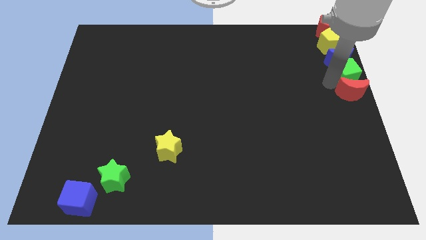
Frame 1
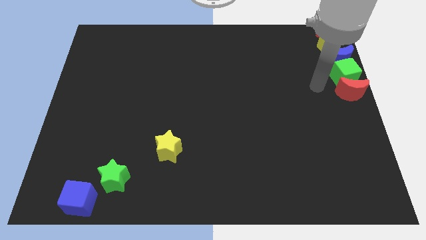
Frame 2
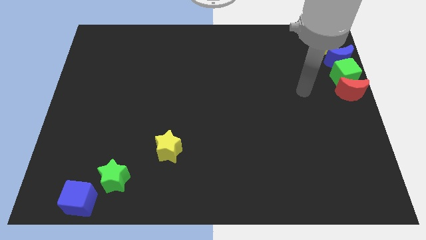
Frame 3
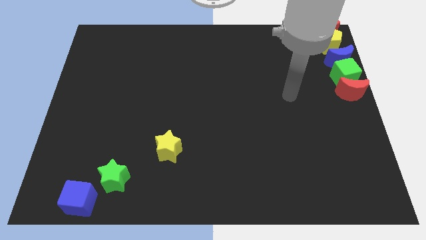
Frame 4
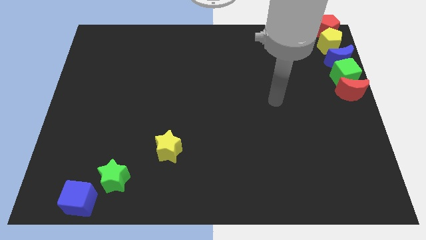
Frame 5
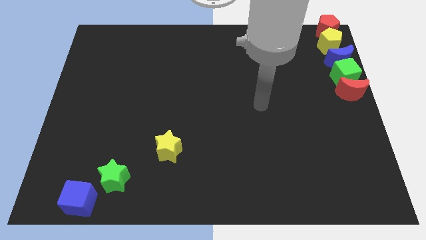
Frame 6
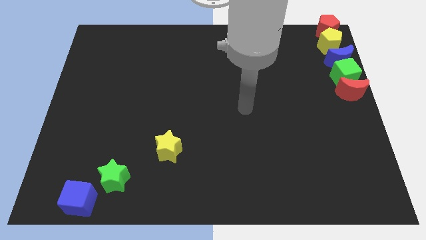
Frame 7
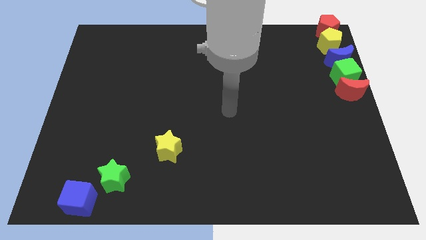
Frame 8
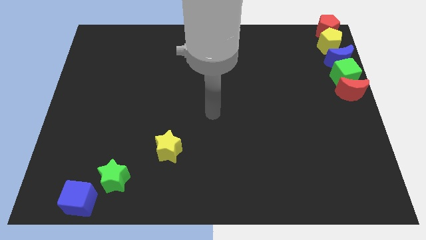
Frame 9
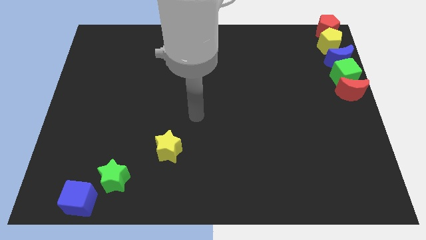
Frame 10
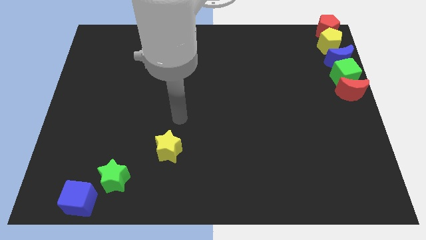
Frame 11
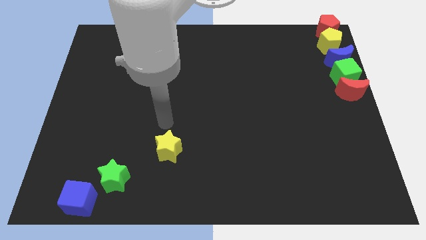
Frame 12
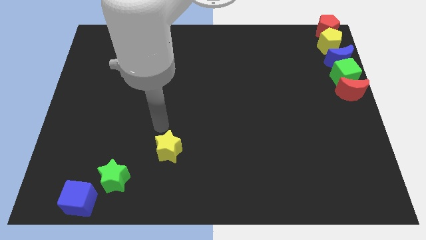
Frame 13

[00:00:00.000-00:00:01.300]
point your arm at the top of yellow star

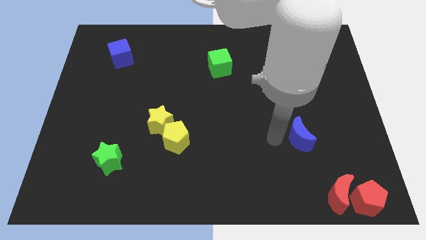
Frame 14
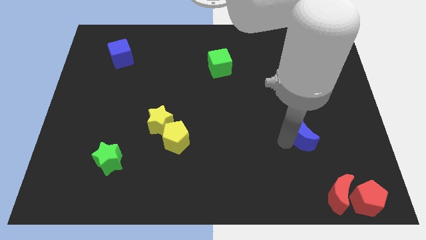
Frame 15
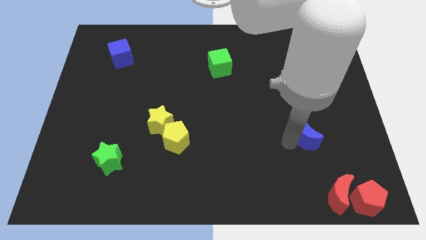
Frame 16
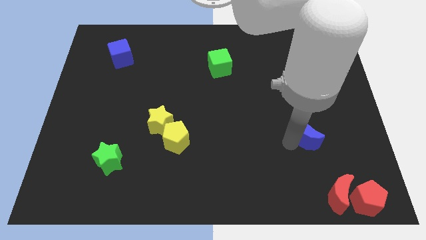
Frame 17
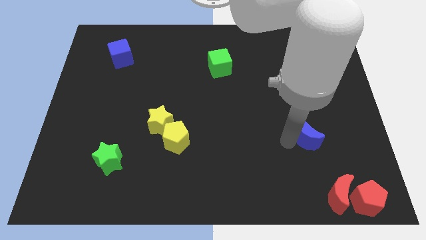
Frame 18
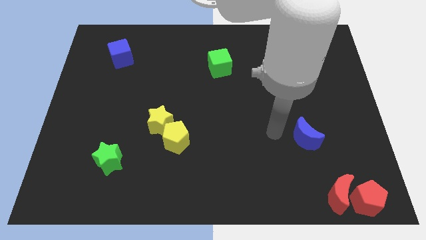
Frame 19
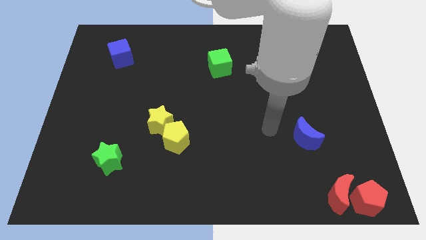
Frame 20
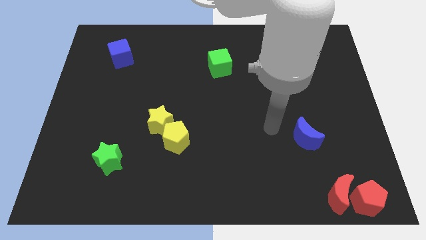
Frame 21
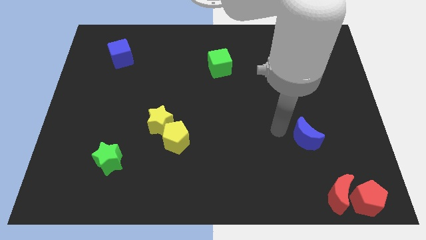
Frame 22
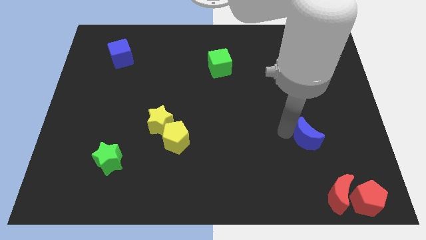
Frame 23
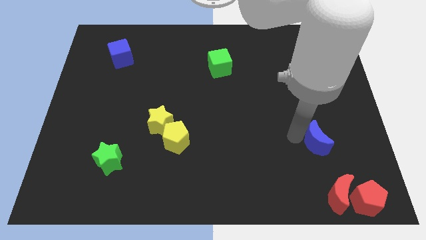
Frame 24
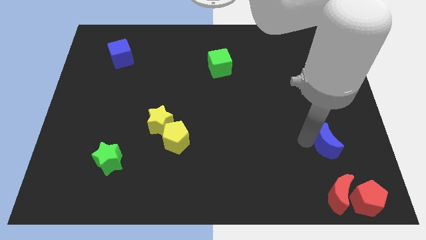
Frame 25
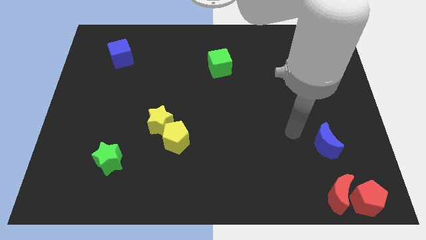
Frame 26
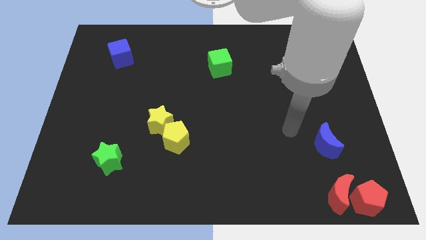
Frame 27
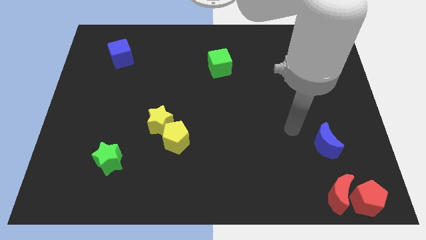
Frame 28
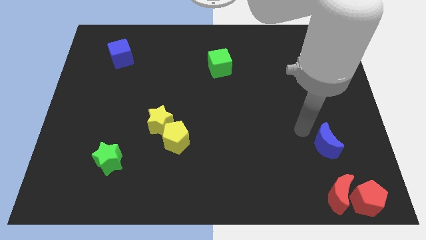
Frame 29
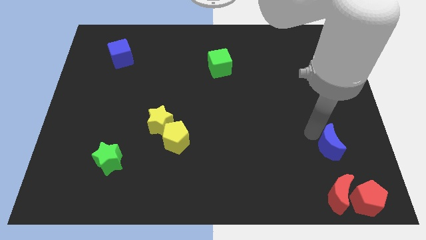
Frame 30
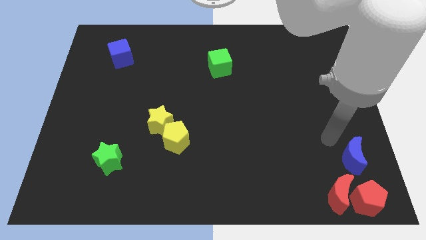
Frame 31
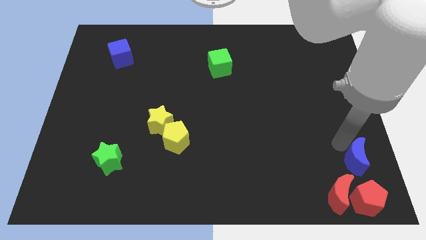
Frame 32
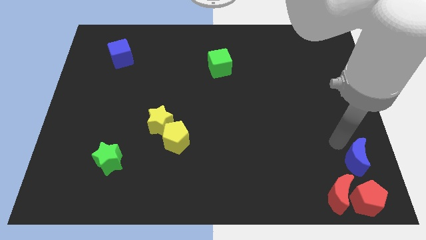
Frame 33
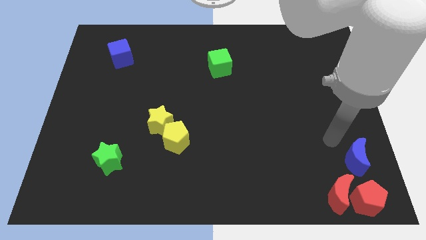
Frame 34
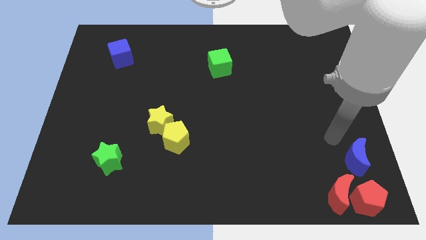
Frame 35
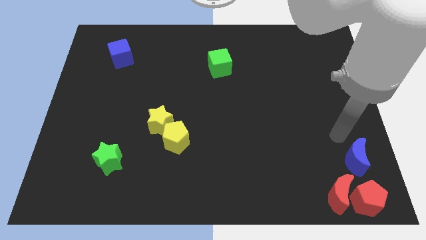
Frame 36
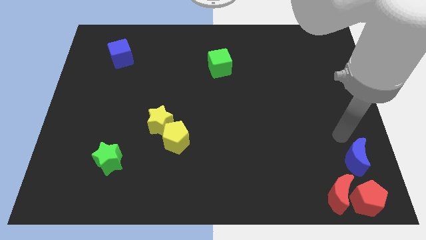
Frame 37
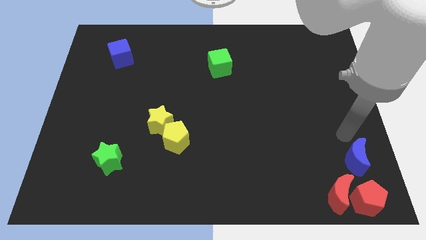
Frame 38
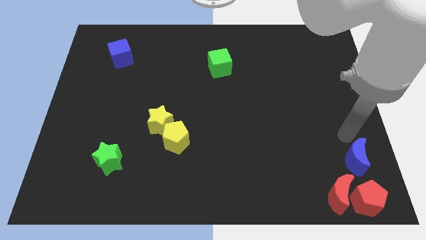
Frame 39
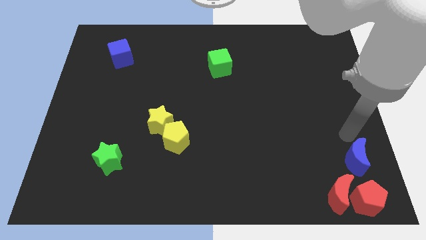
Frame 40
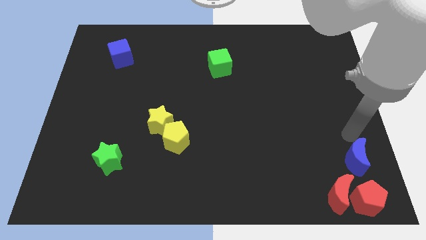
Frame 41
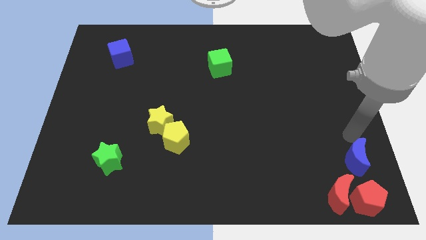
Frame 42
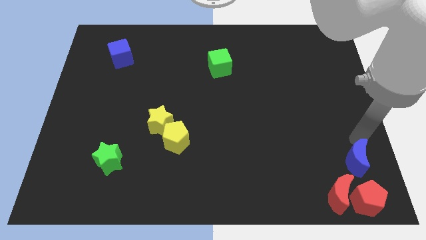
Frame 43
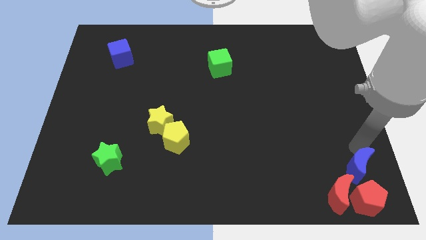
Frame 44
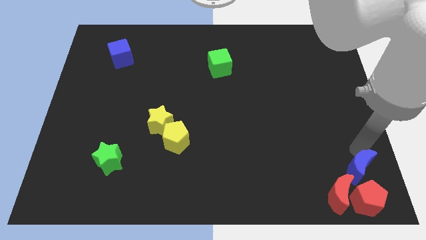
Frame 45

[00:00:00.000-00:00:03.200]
push the blue moon on the top left of the red pentagon

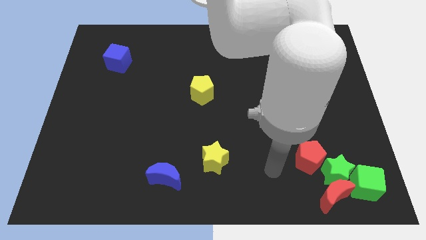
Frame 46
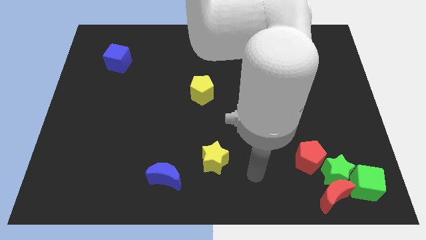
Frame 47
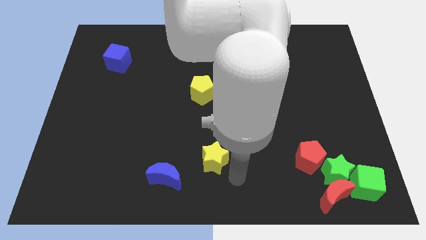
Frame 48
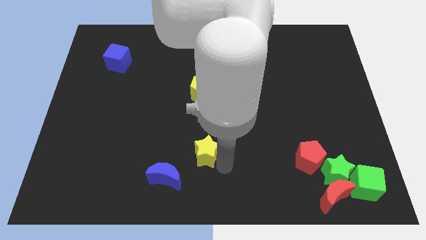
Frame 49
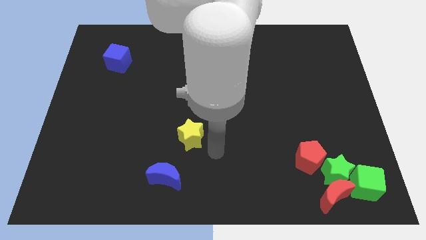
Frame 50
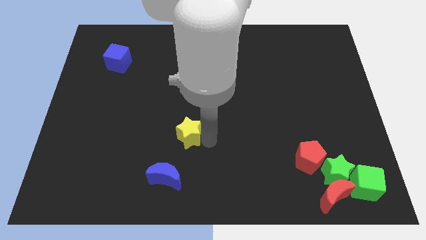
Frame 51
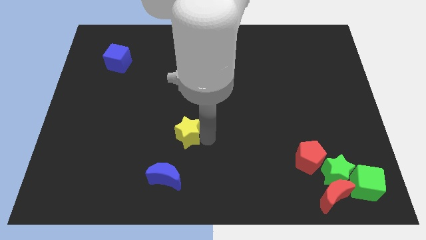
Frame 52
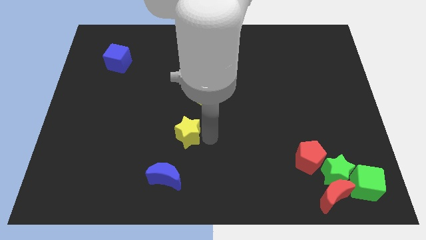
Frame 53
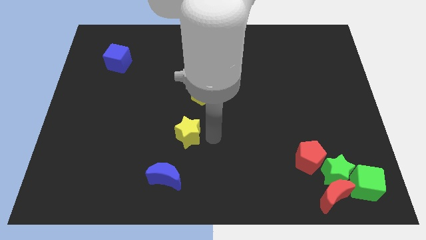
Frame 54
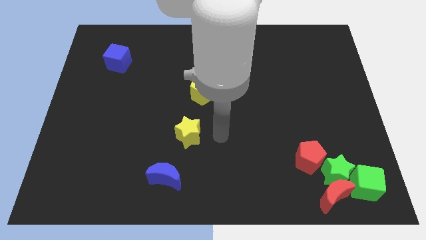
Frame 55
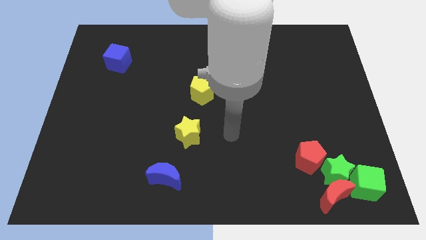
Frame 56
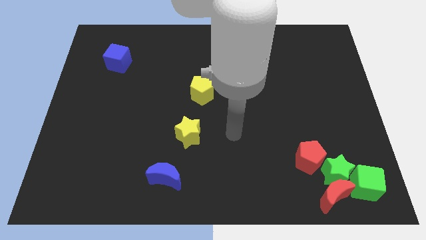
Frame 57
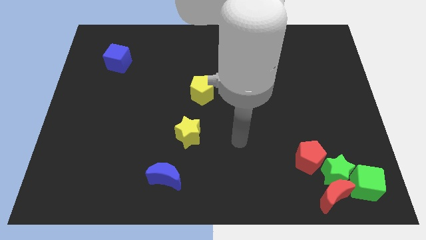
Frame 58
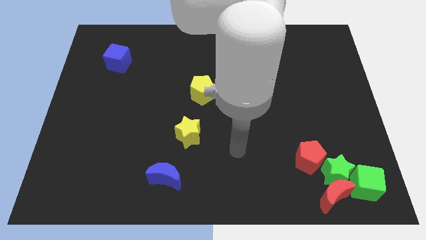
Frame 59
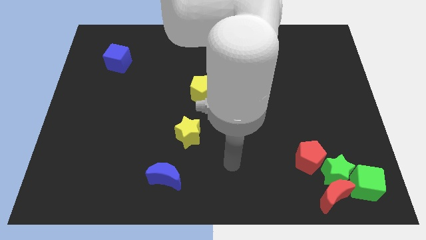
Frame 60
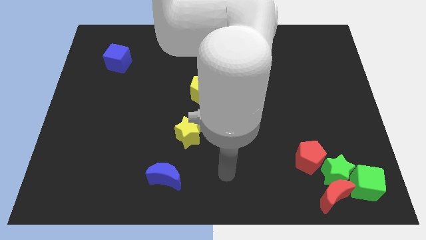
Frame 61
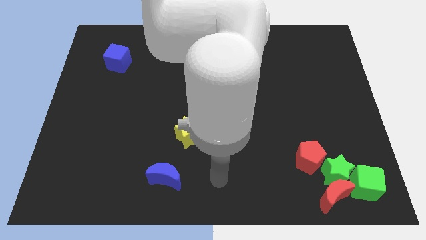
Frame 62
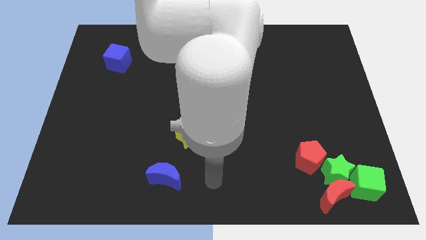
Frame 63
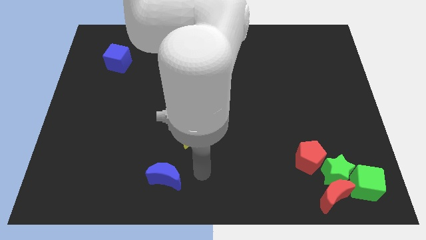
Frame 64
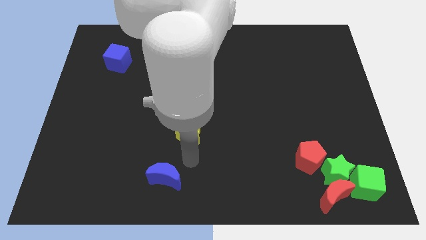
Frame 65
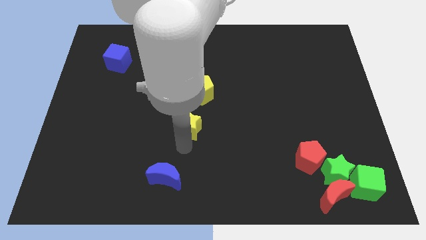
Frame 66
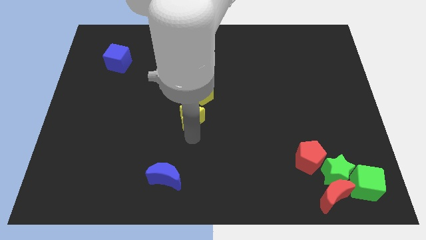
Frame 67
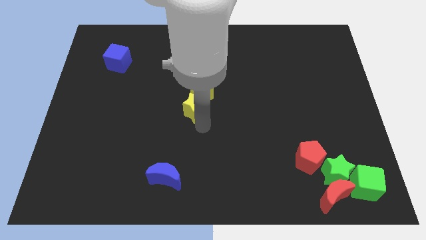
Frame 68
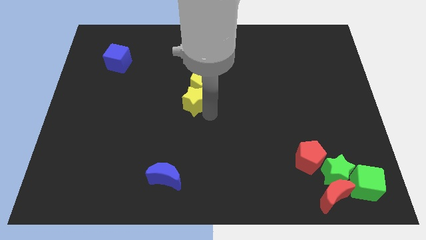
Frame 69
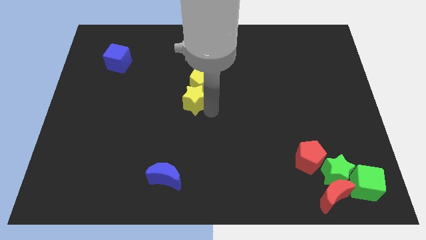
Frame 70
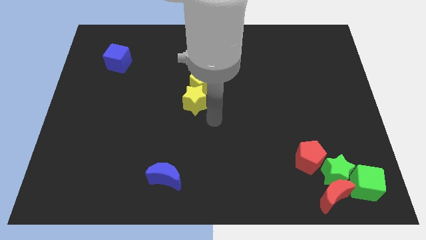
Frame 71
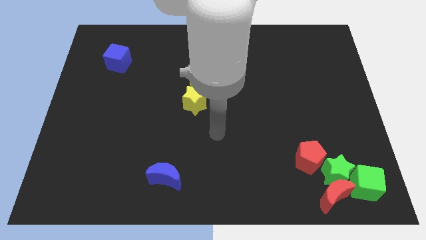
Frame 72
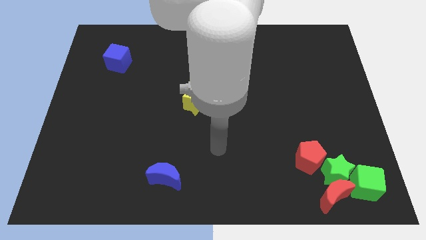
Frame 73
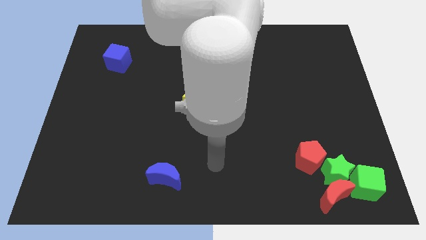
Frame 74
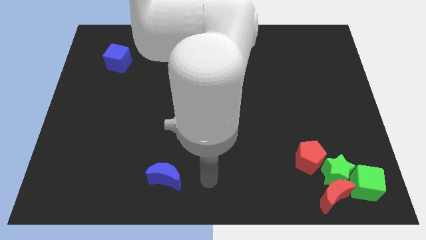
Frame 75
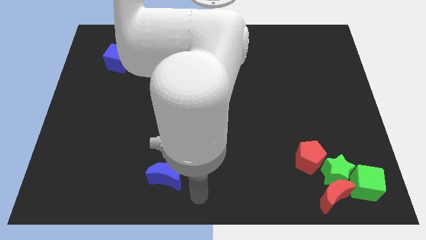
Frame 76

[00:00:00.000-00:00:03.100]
push the yellow star into the bottom of yellow pentagon

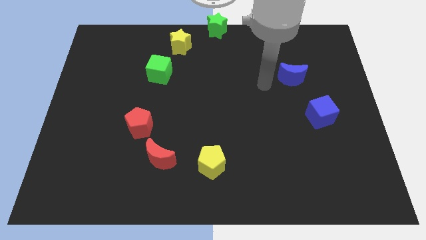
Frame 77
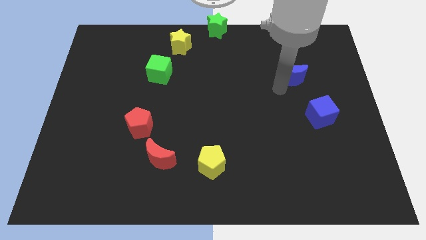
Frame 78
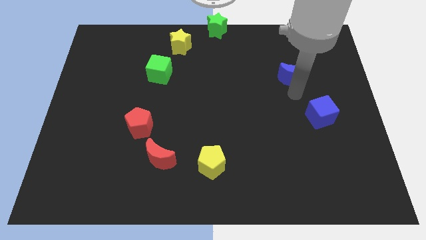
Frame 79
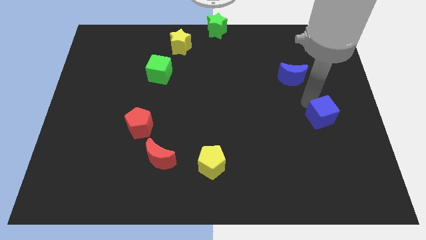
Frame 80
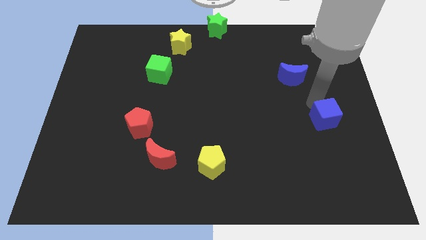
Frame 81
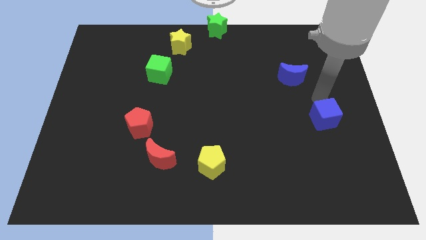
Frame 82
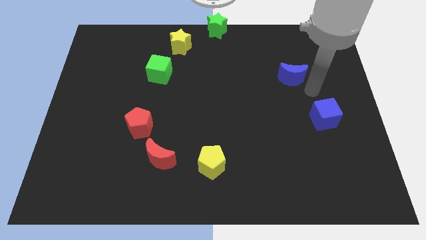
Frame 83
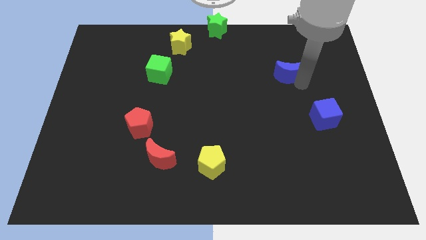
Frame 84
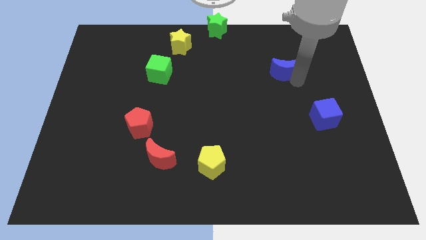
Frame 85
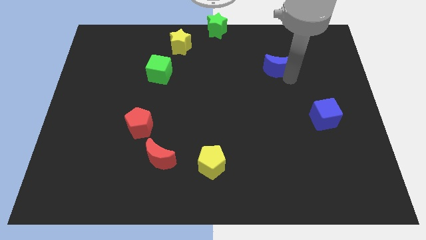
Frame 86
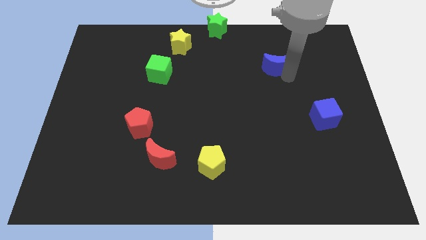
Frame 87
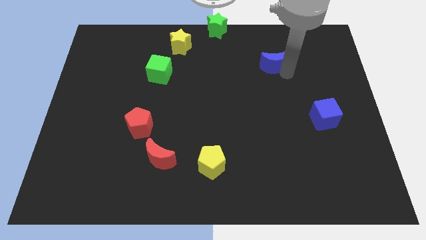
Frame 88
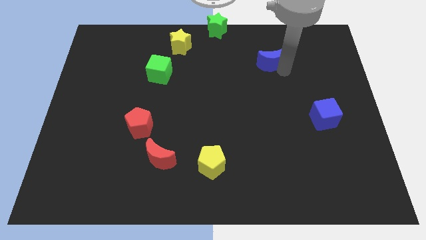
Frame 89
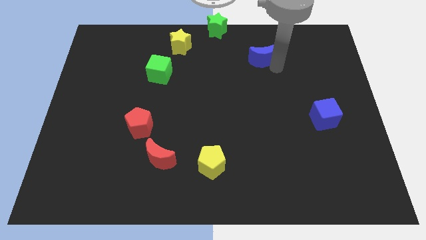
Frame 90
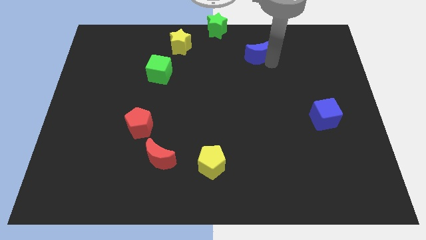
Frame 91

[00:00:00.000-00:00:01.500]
push blue moon upwards
